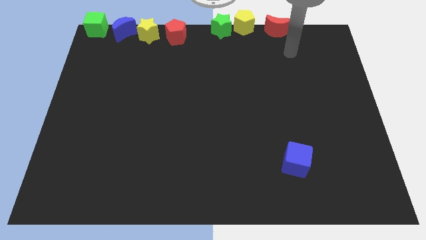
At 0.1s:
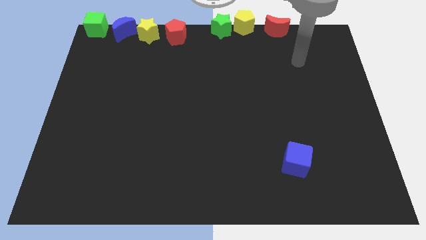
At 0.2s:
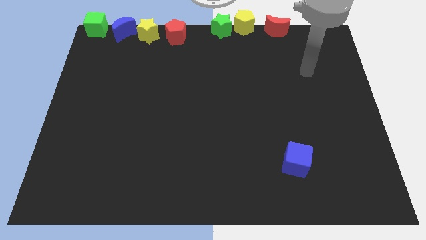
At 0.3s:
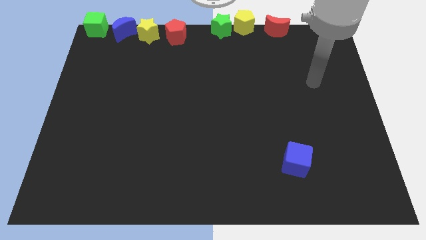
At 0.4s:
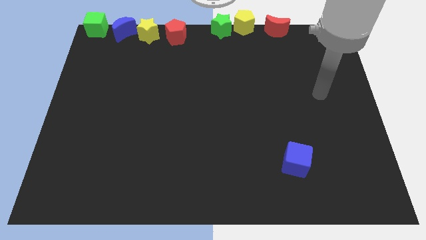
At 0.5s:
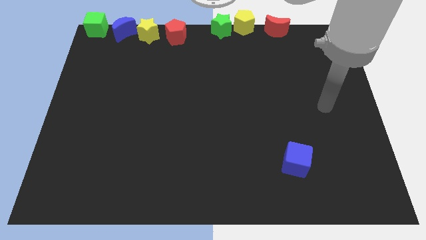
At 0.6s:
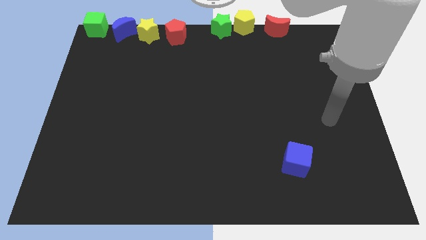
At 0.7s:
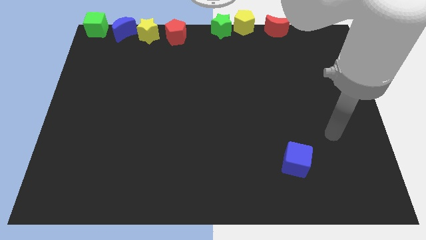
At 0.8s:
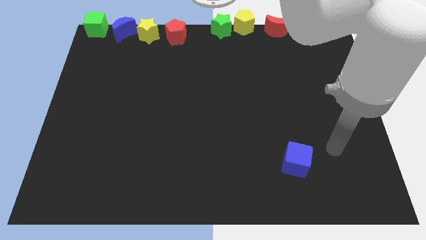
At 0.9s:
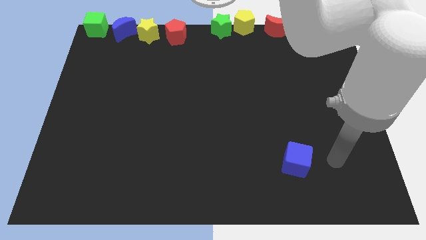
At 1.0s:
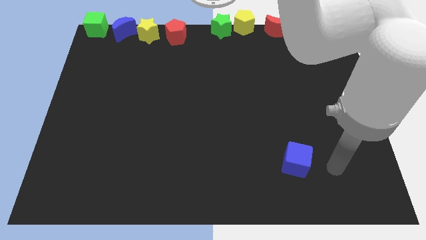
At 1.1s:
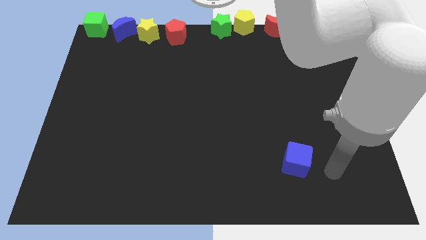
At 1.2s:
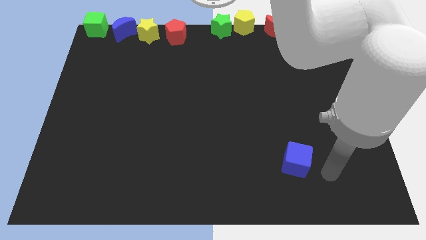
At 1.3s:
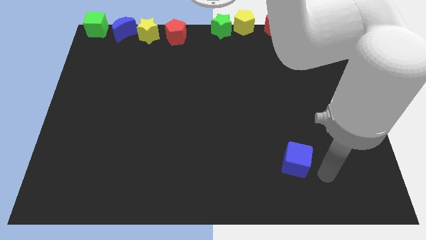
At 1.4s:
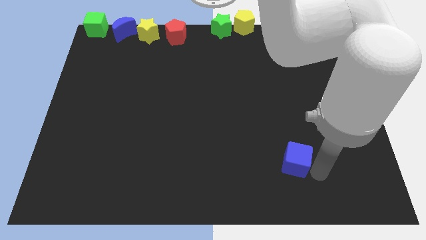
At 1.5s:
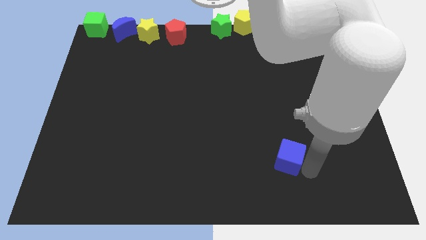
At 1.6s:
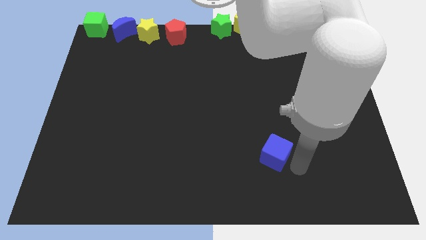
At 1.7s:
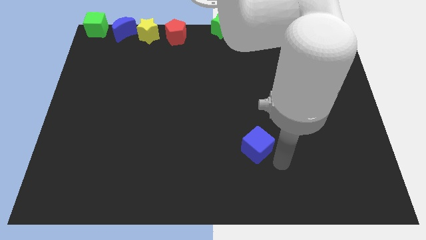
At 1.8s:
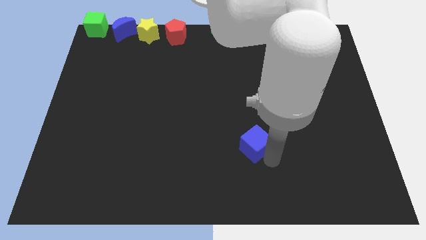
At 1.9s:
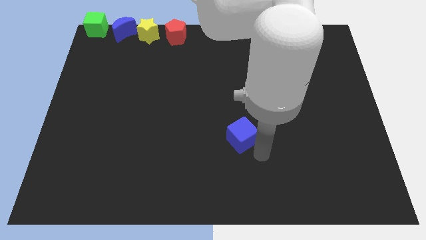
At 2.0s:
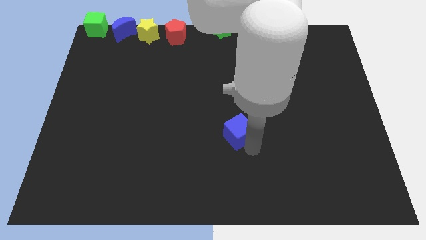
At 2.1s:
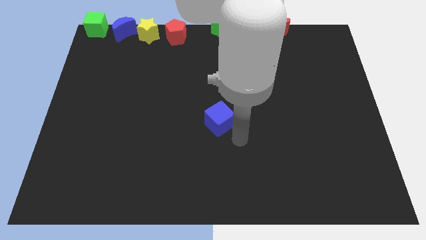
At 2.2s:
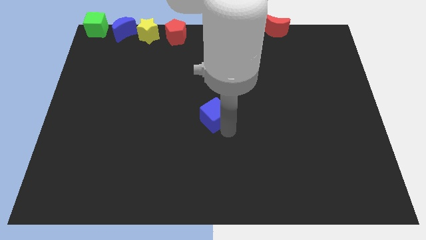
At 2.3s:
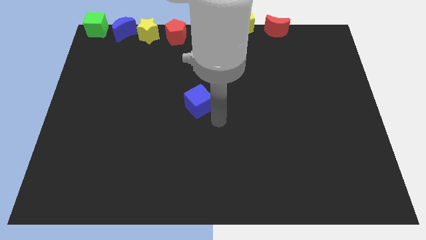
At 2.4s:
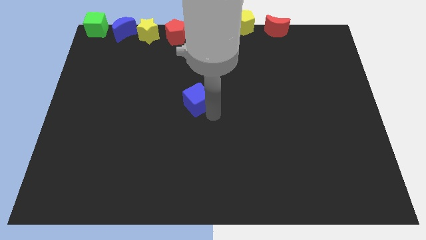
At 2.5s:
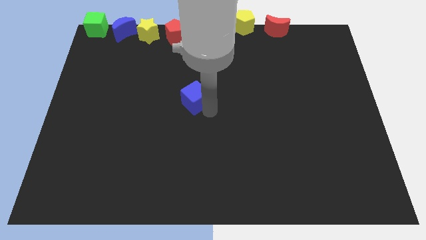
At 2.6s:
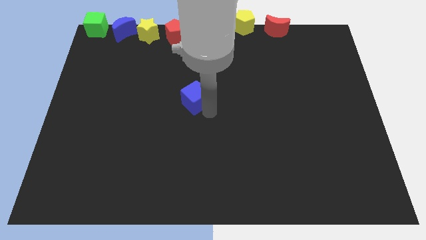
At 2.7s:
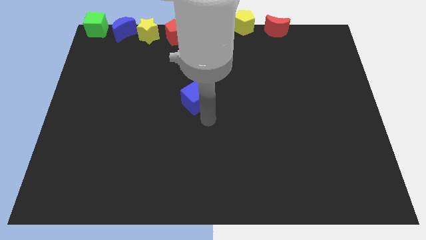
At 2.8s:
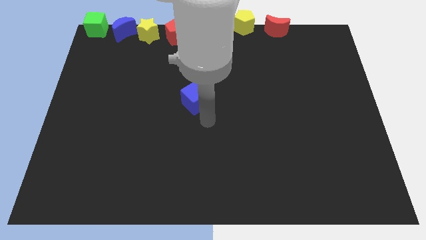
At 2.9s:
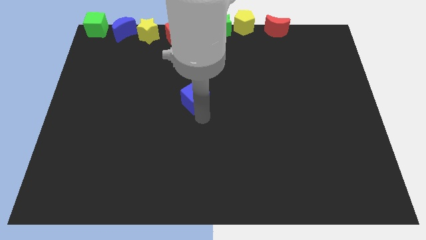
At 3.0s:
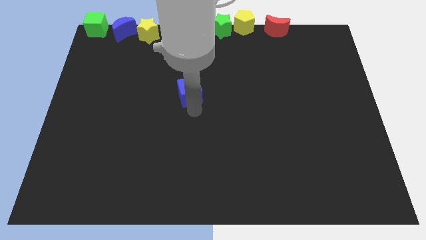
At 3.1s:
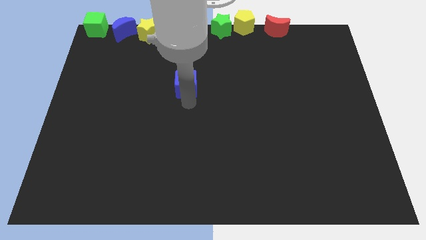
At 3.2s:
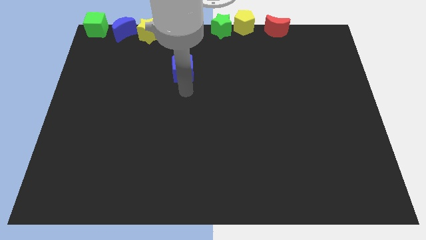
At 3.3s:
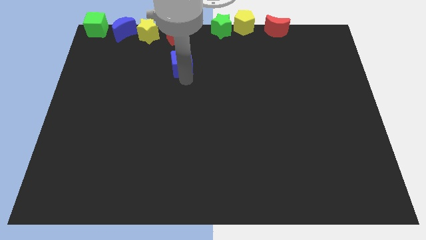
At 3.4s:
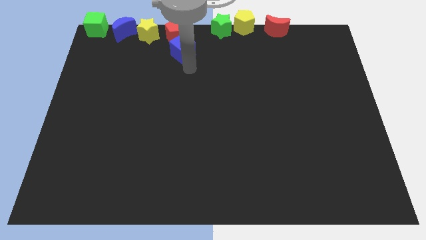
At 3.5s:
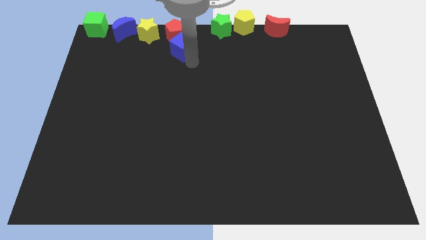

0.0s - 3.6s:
push the blue cube towards the red pentagon

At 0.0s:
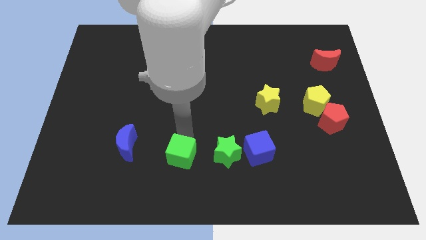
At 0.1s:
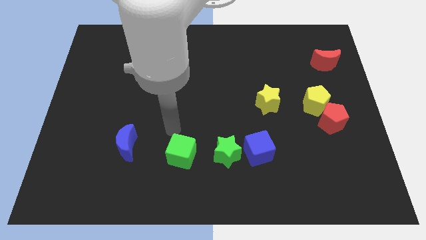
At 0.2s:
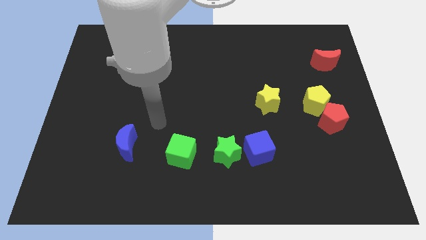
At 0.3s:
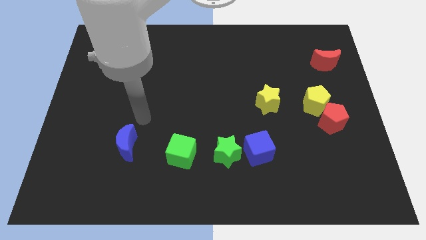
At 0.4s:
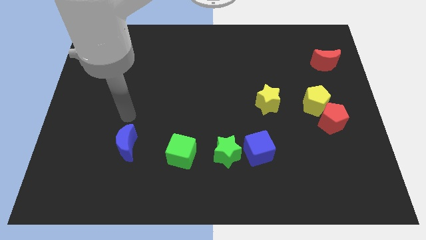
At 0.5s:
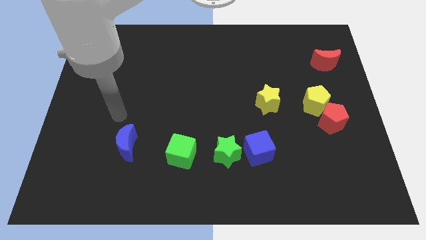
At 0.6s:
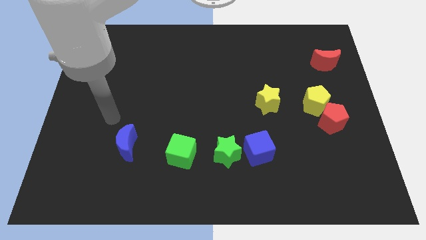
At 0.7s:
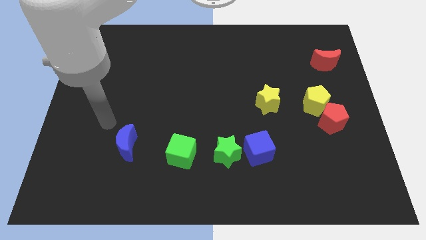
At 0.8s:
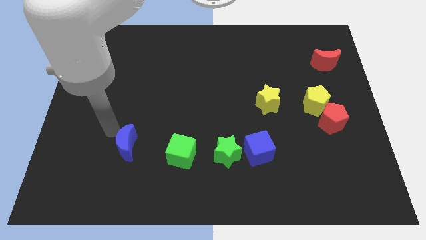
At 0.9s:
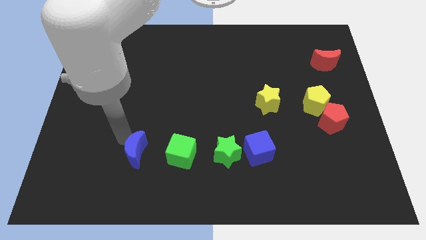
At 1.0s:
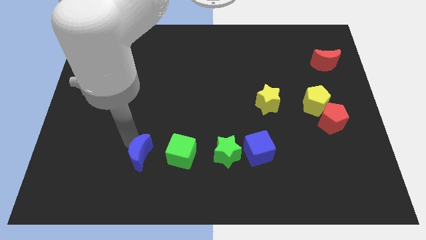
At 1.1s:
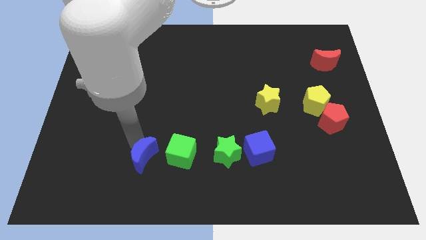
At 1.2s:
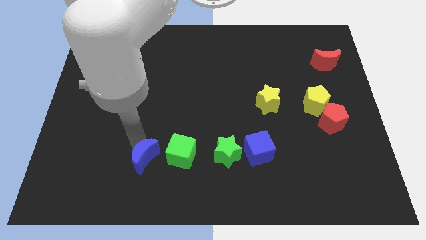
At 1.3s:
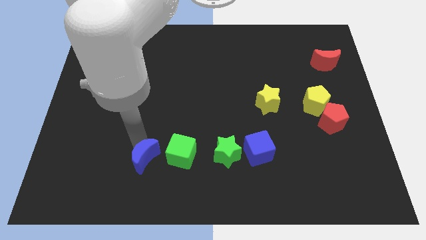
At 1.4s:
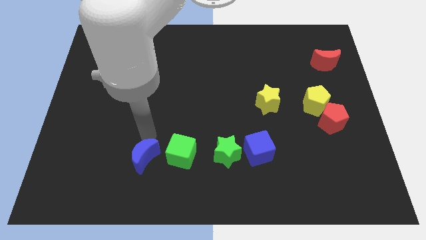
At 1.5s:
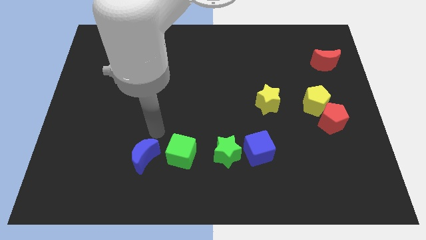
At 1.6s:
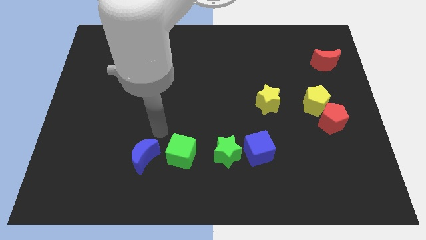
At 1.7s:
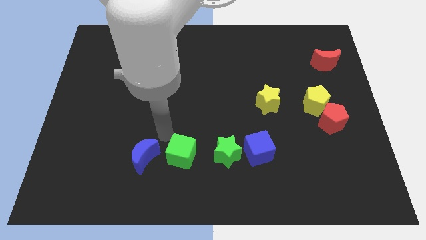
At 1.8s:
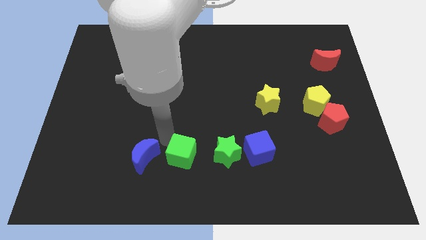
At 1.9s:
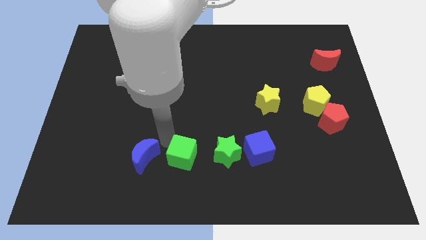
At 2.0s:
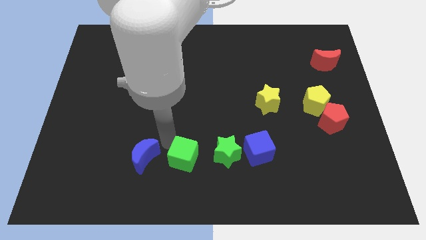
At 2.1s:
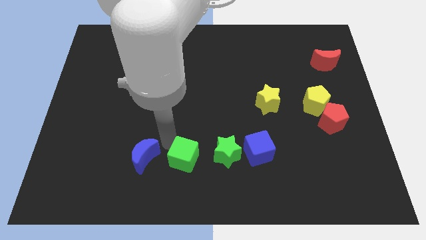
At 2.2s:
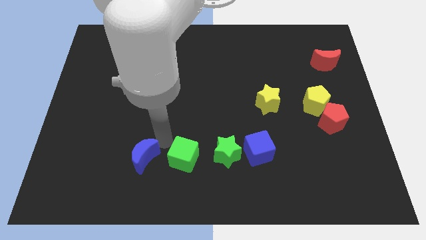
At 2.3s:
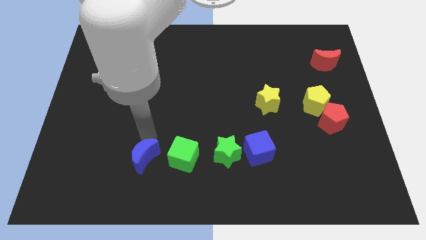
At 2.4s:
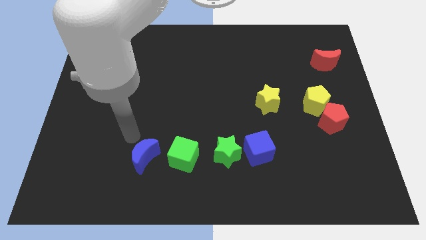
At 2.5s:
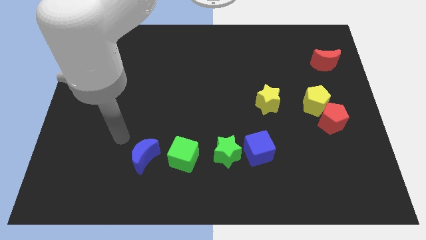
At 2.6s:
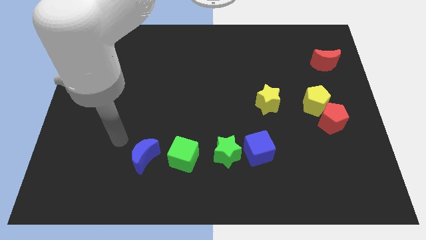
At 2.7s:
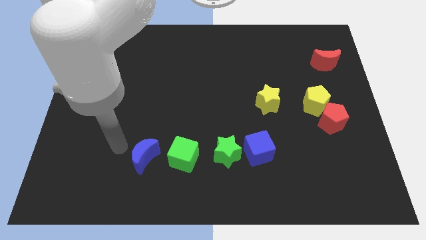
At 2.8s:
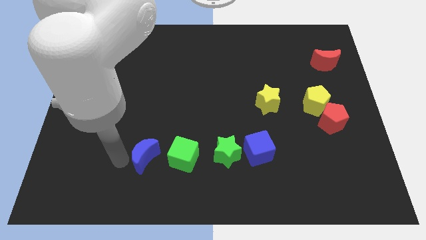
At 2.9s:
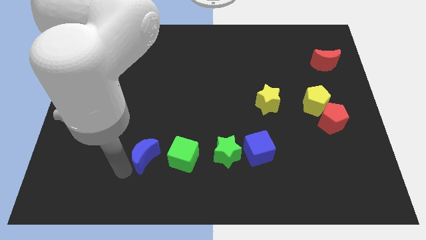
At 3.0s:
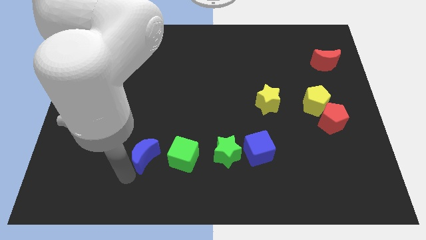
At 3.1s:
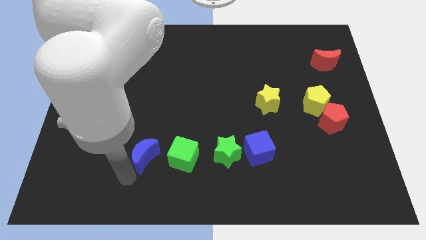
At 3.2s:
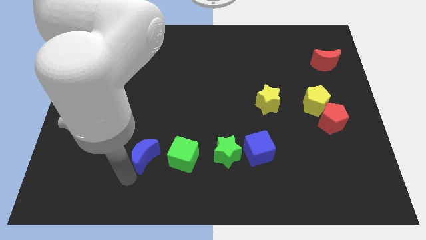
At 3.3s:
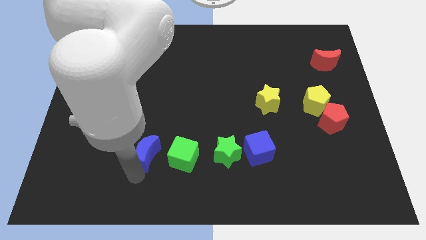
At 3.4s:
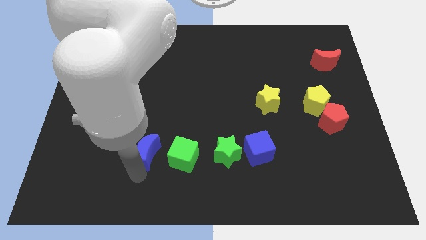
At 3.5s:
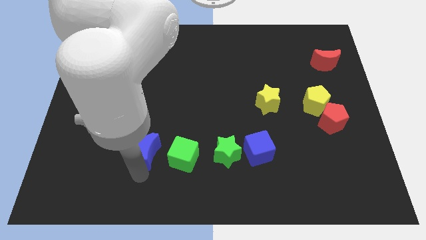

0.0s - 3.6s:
slightly push the blue moon towards the green cube

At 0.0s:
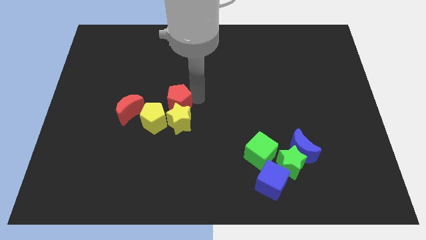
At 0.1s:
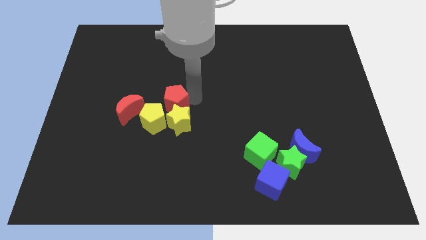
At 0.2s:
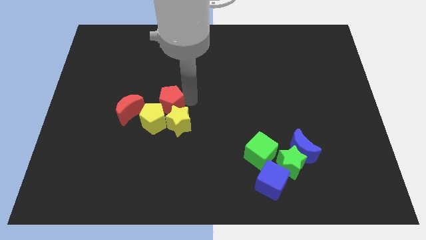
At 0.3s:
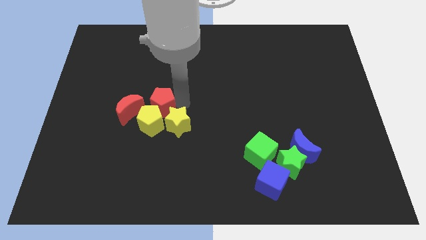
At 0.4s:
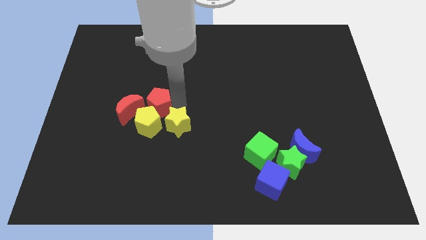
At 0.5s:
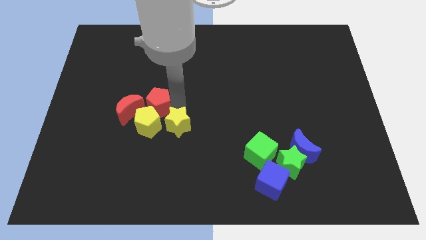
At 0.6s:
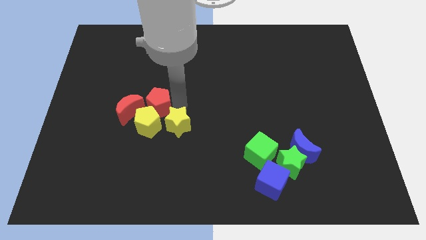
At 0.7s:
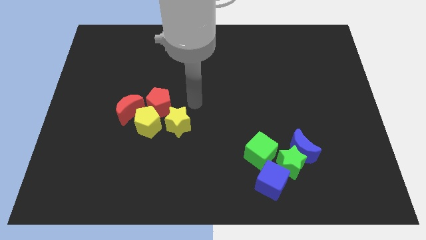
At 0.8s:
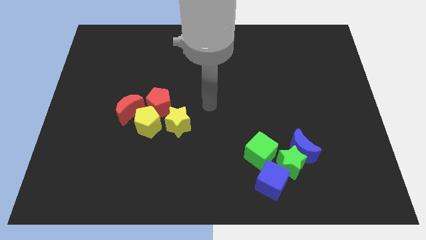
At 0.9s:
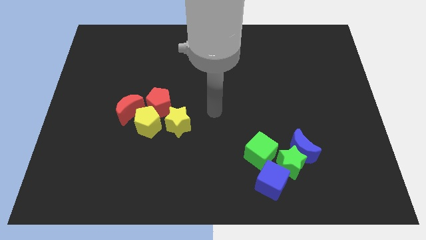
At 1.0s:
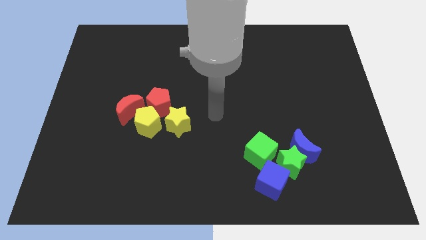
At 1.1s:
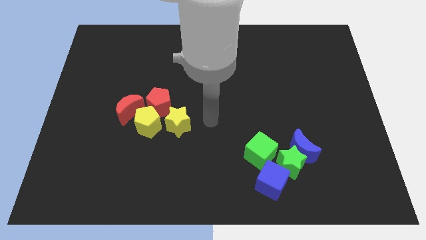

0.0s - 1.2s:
push the red pentagon into the red crescent

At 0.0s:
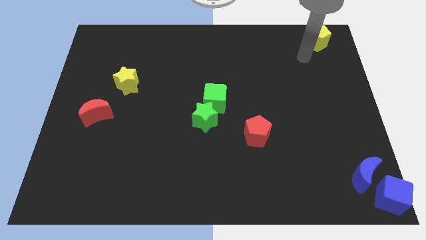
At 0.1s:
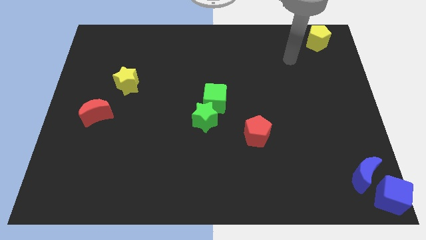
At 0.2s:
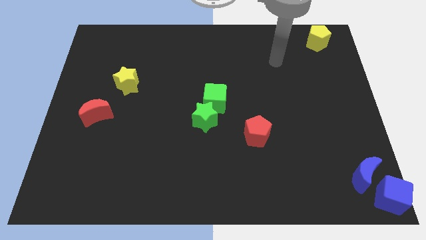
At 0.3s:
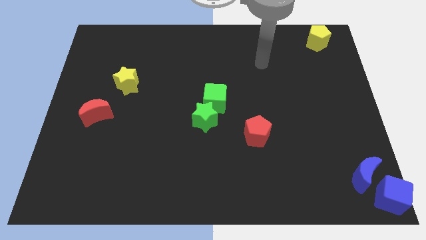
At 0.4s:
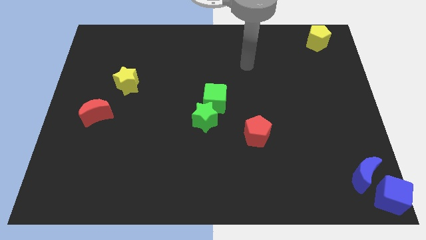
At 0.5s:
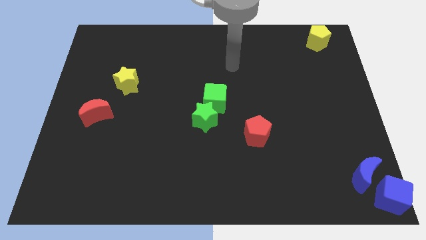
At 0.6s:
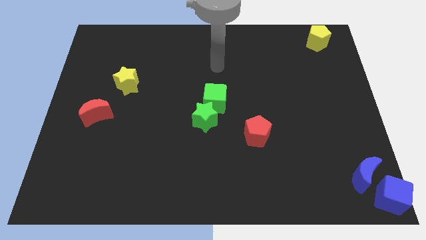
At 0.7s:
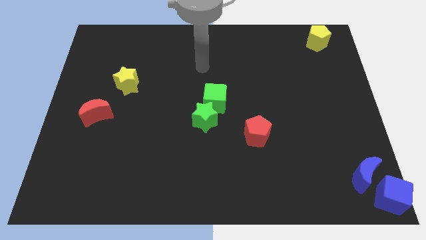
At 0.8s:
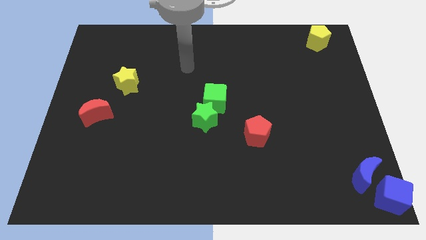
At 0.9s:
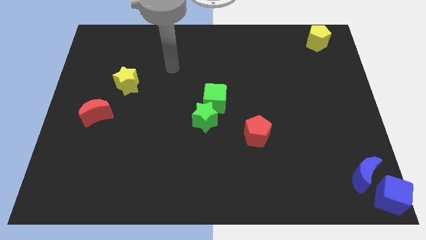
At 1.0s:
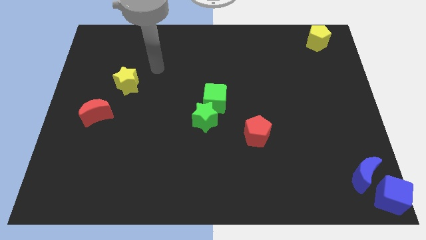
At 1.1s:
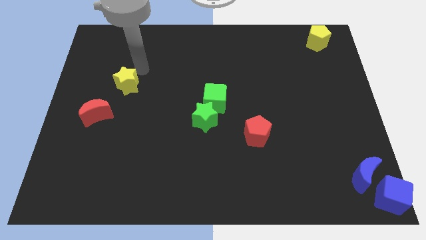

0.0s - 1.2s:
move close to the yellow star
